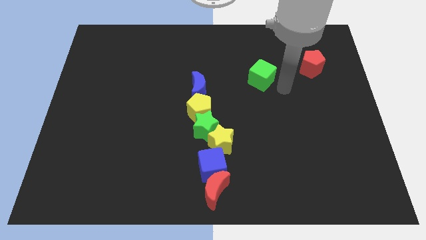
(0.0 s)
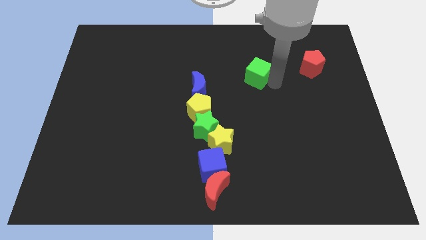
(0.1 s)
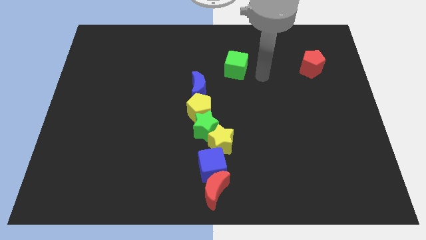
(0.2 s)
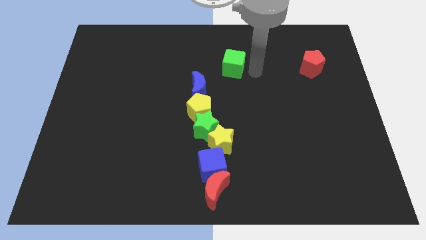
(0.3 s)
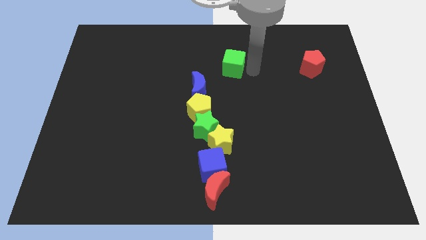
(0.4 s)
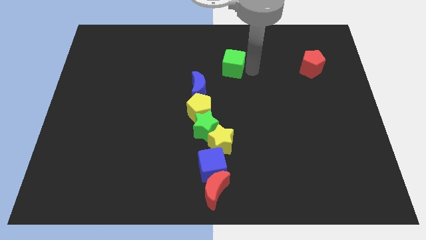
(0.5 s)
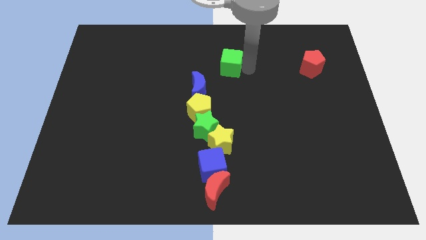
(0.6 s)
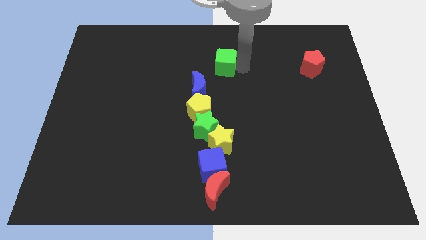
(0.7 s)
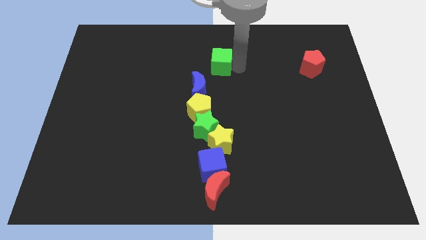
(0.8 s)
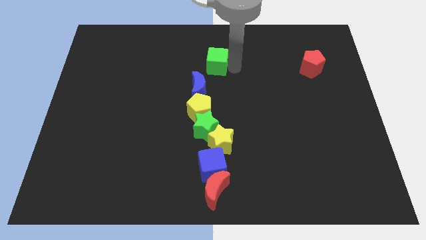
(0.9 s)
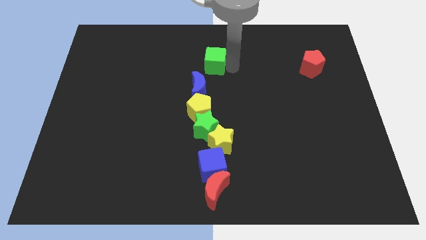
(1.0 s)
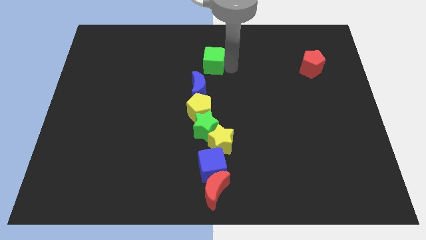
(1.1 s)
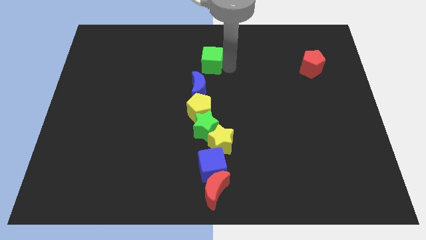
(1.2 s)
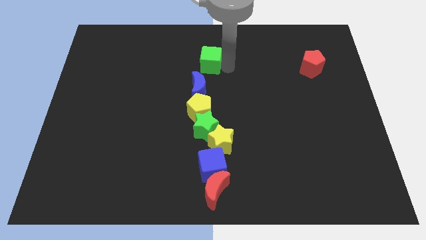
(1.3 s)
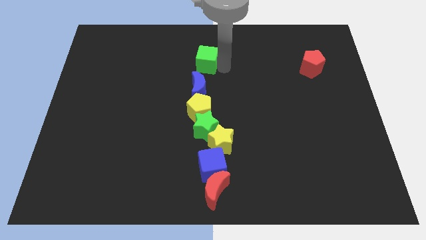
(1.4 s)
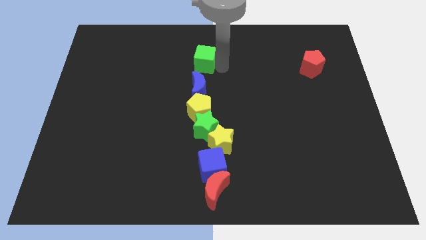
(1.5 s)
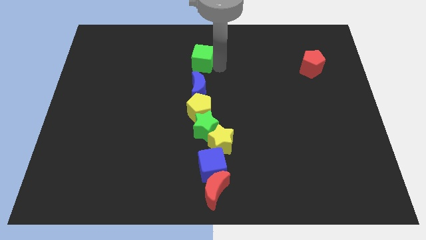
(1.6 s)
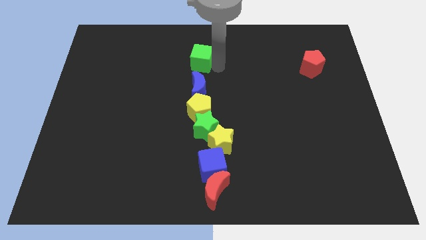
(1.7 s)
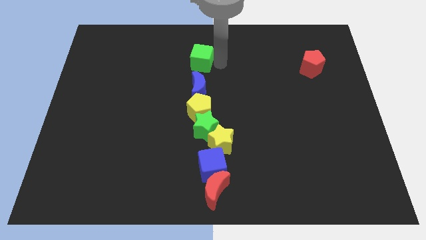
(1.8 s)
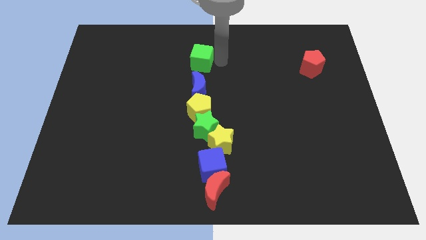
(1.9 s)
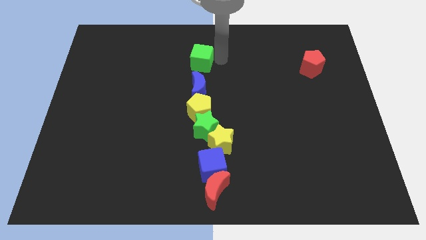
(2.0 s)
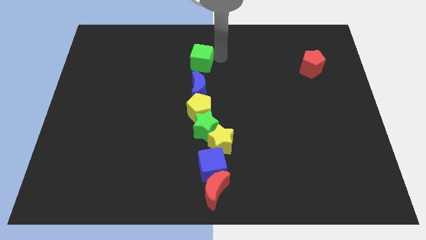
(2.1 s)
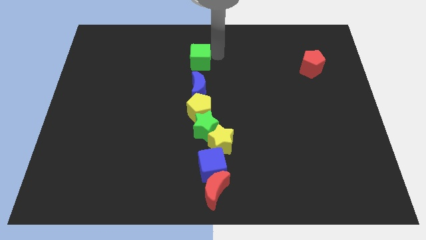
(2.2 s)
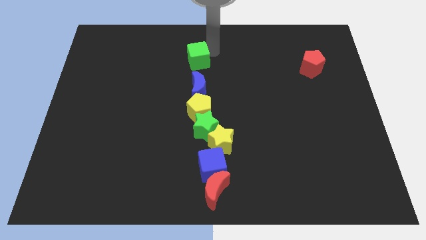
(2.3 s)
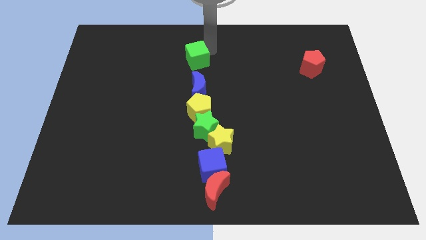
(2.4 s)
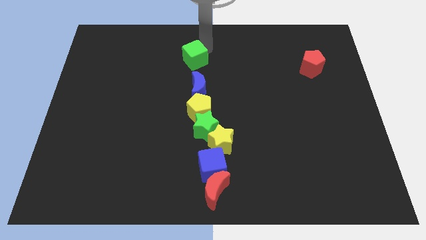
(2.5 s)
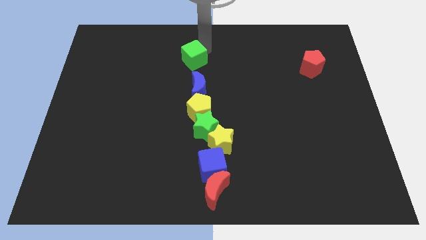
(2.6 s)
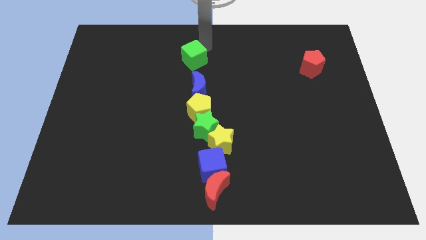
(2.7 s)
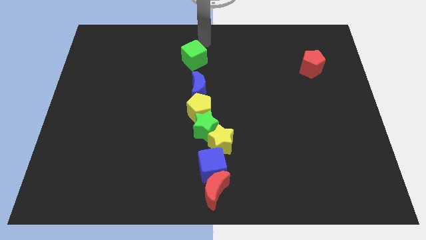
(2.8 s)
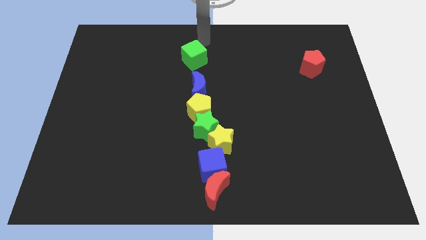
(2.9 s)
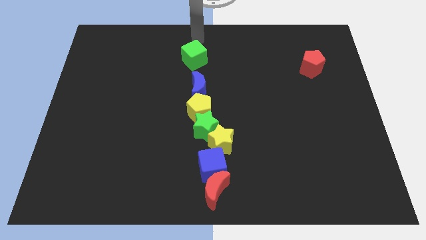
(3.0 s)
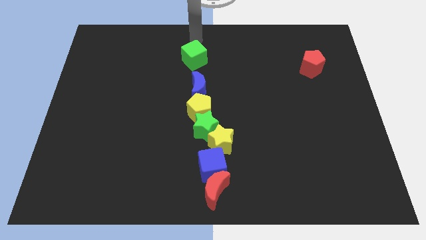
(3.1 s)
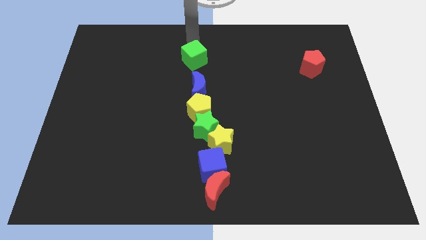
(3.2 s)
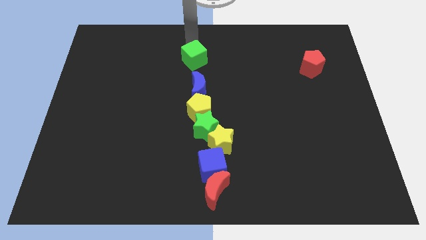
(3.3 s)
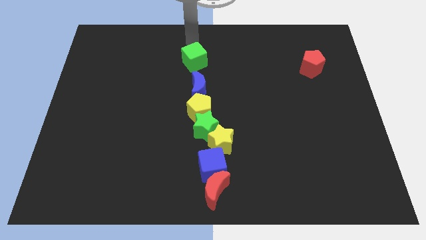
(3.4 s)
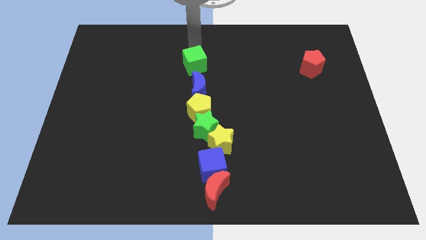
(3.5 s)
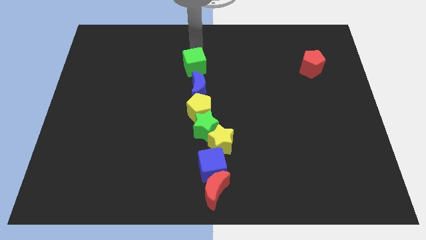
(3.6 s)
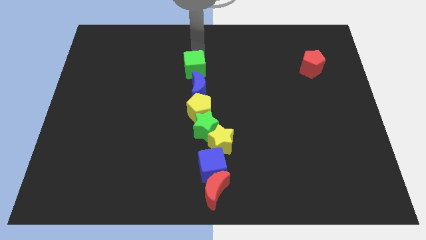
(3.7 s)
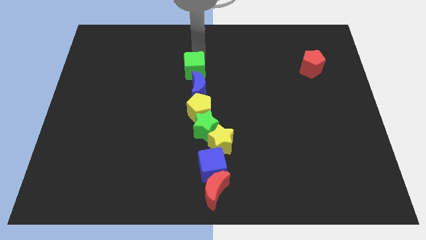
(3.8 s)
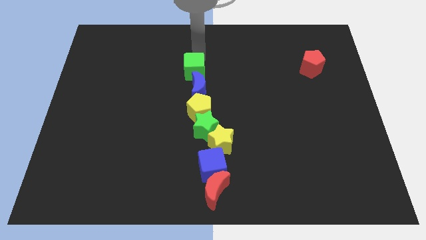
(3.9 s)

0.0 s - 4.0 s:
move the green cube to the top of the blue crescent

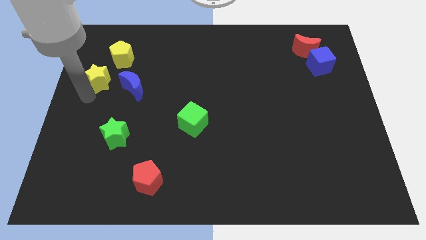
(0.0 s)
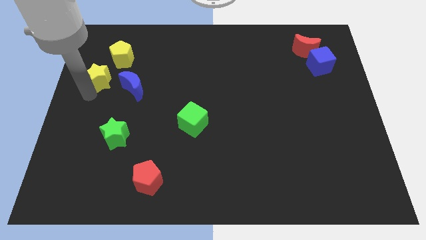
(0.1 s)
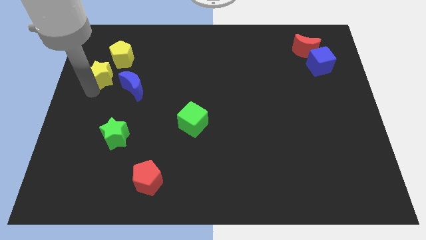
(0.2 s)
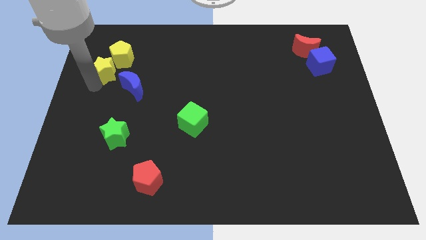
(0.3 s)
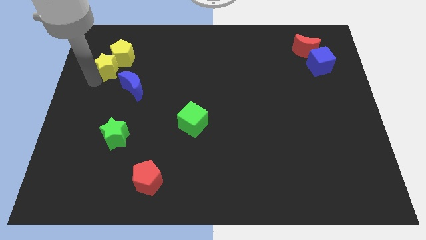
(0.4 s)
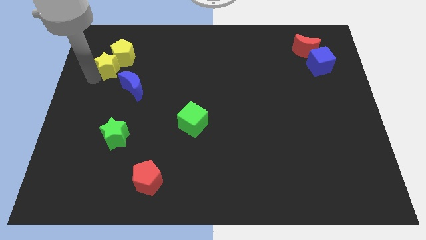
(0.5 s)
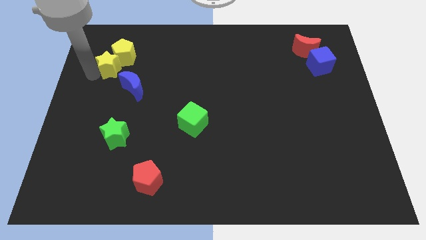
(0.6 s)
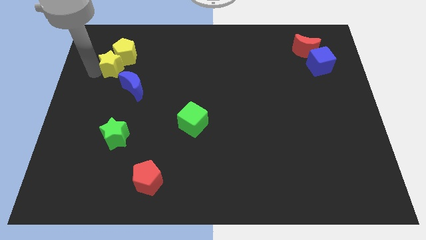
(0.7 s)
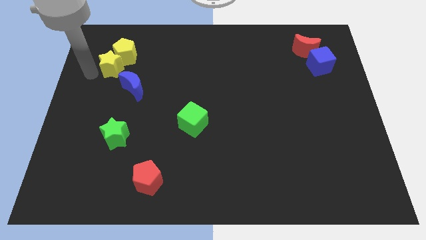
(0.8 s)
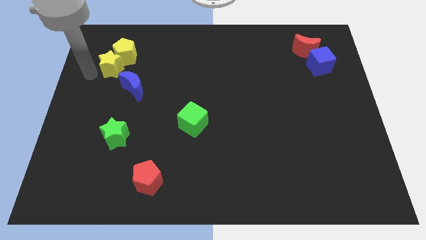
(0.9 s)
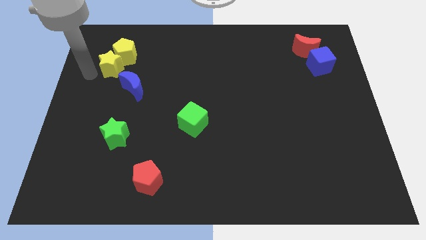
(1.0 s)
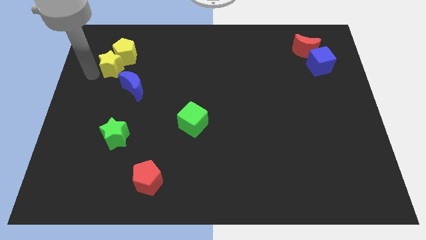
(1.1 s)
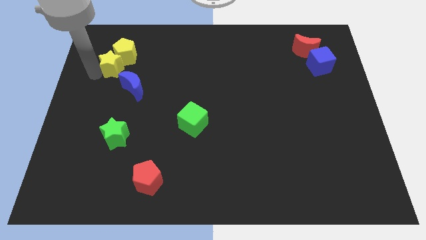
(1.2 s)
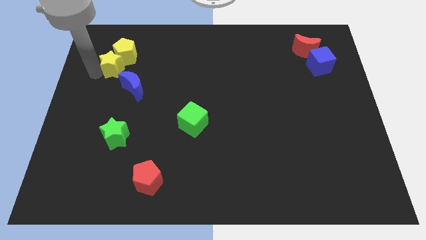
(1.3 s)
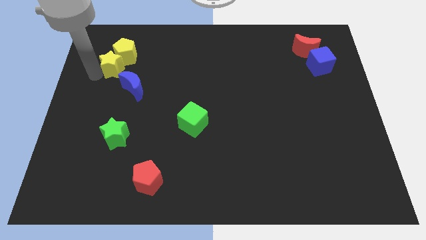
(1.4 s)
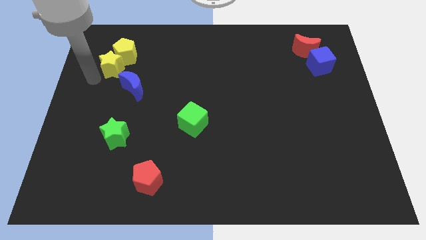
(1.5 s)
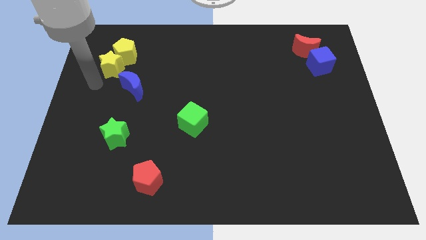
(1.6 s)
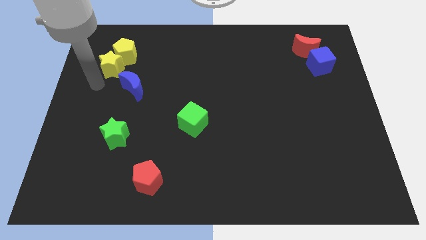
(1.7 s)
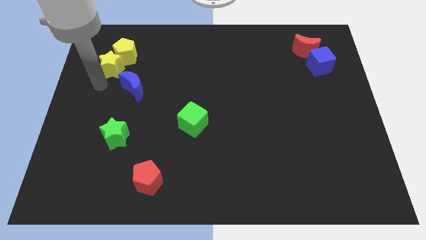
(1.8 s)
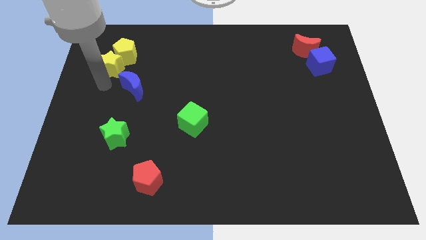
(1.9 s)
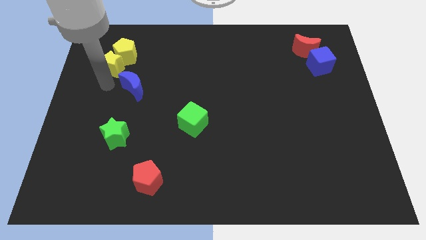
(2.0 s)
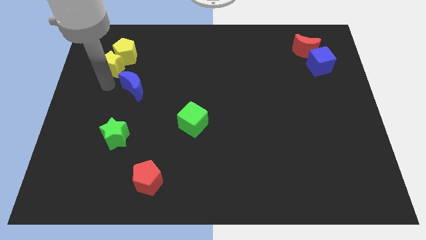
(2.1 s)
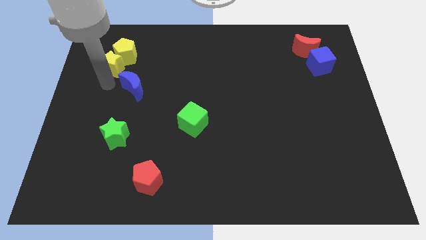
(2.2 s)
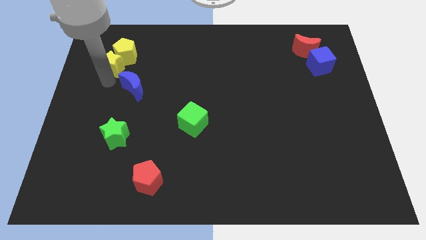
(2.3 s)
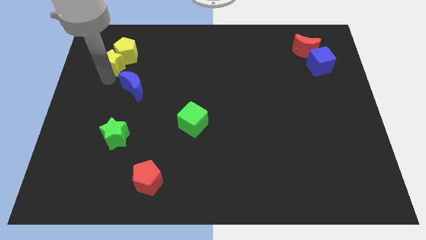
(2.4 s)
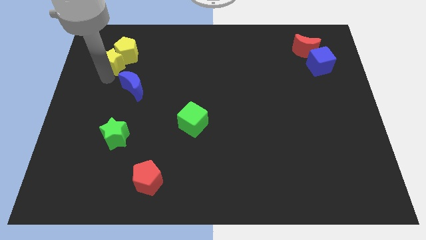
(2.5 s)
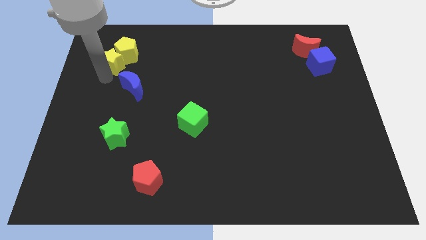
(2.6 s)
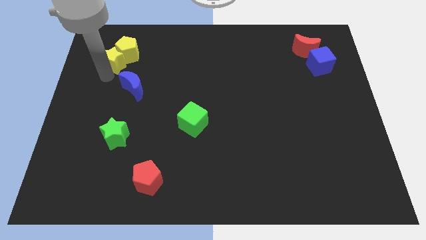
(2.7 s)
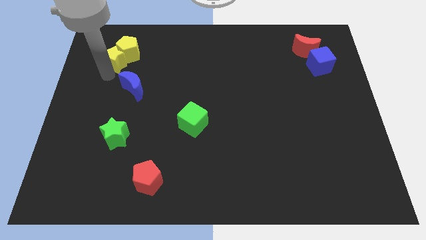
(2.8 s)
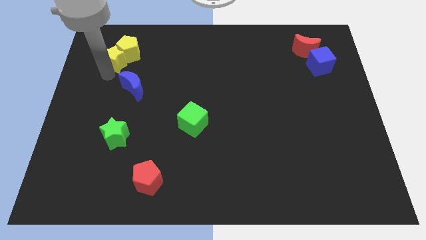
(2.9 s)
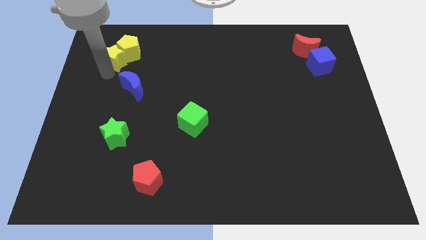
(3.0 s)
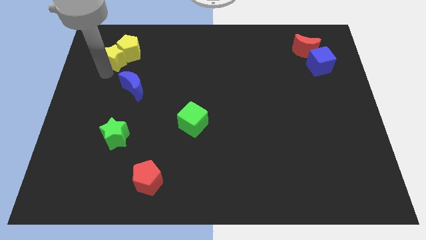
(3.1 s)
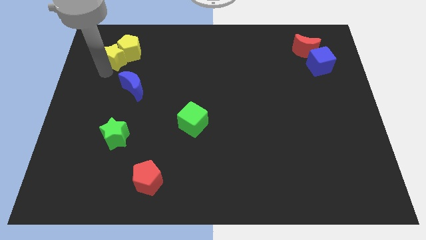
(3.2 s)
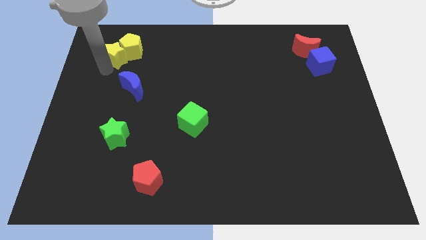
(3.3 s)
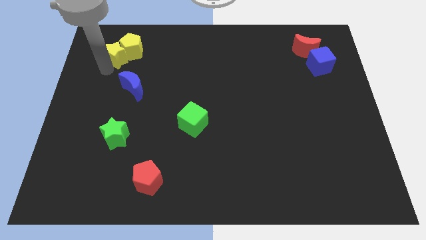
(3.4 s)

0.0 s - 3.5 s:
move yellow blocks slightly to top

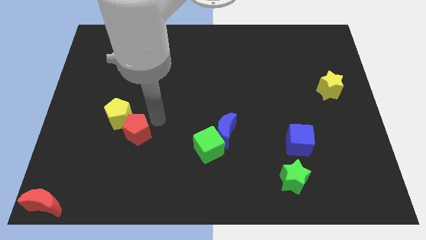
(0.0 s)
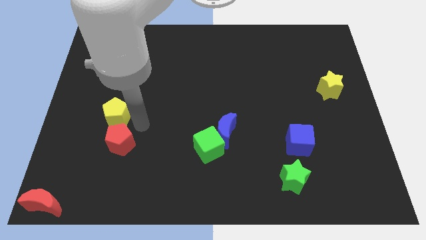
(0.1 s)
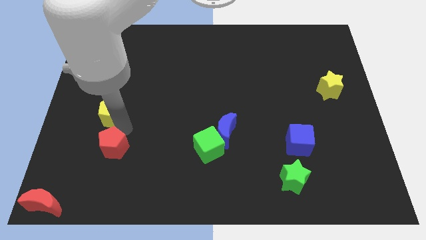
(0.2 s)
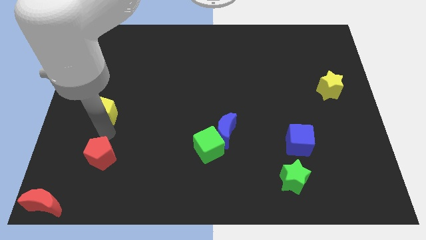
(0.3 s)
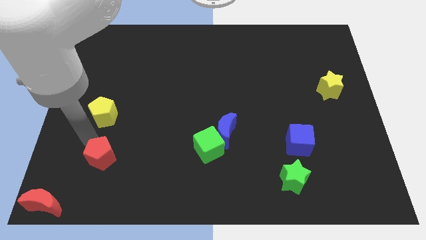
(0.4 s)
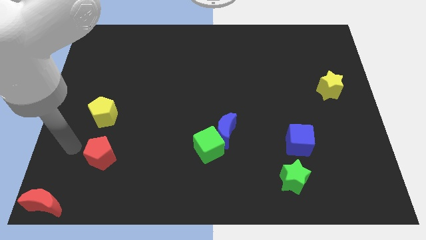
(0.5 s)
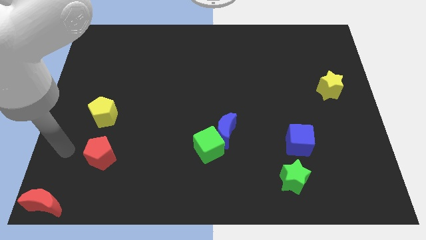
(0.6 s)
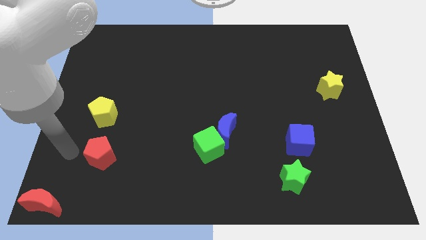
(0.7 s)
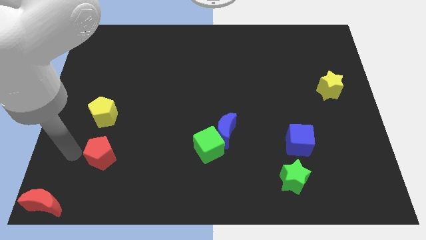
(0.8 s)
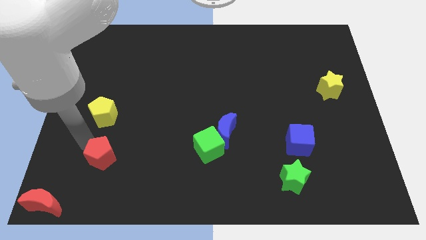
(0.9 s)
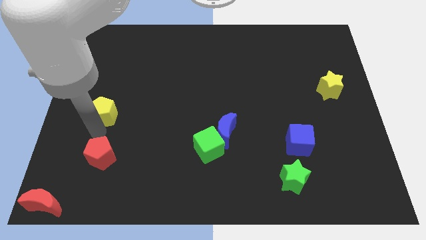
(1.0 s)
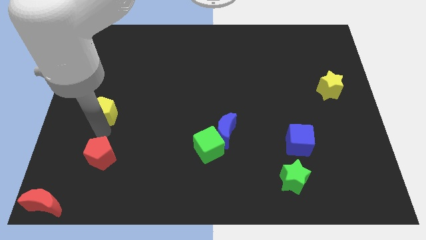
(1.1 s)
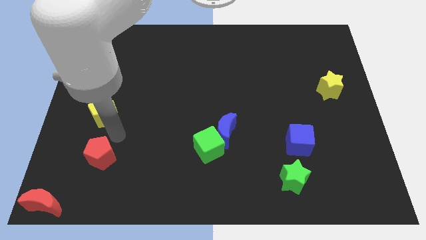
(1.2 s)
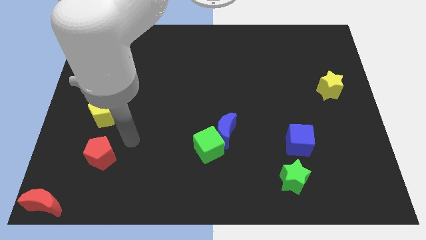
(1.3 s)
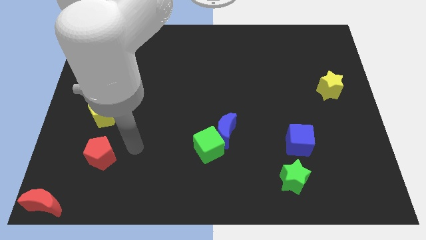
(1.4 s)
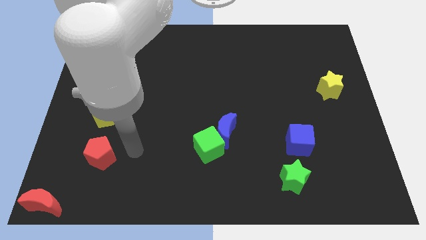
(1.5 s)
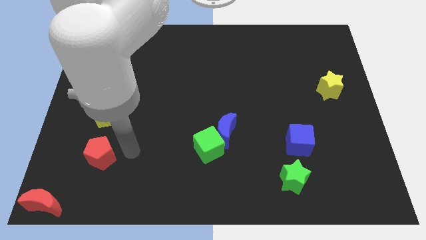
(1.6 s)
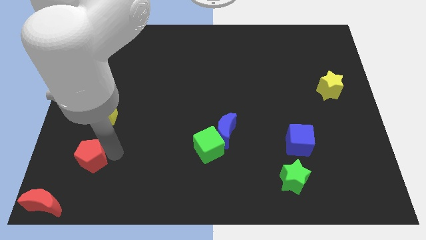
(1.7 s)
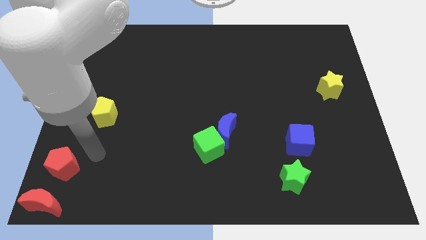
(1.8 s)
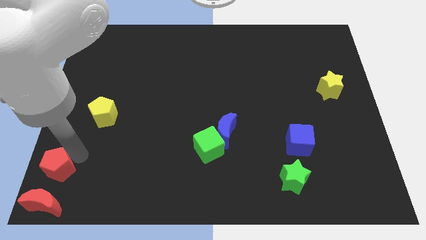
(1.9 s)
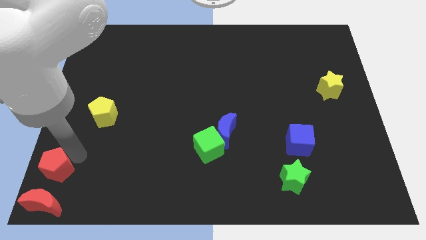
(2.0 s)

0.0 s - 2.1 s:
separate the red pentagon from the yellow pentagon
